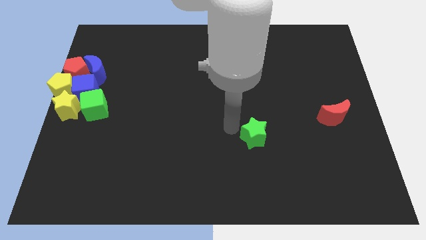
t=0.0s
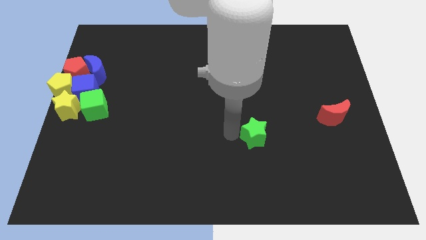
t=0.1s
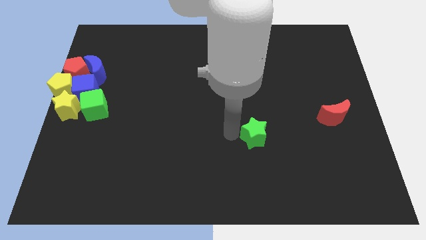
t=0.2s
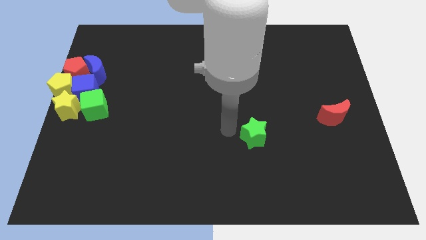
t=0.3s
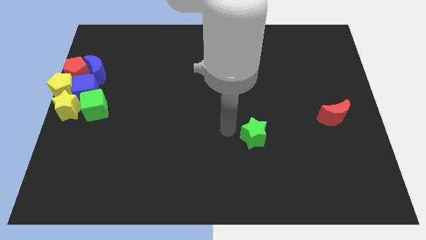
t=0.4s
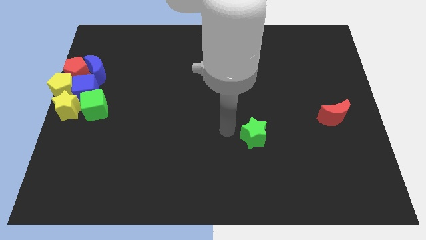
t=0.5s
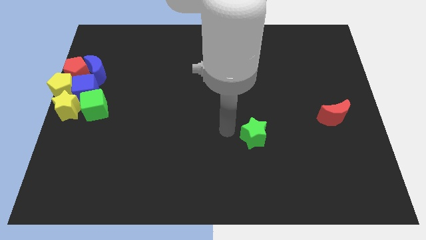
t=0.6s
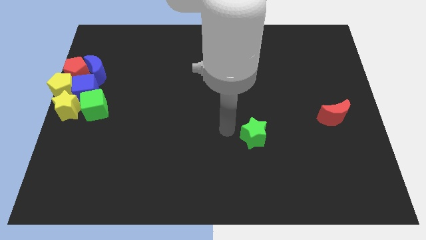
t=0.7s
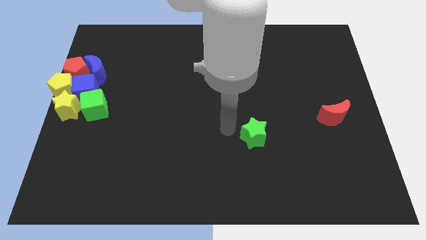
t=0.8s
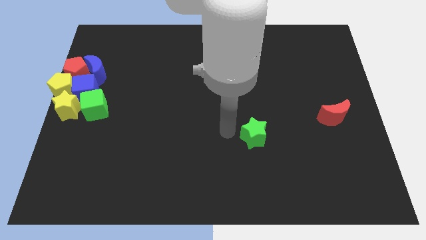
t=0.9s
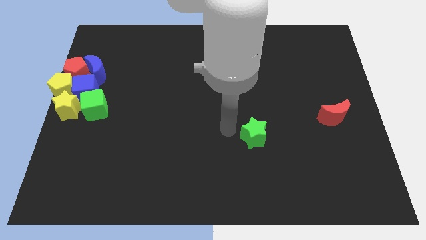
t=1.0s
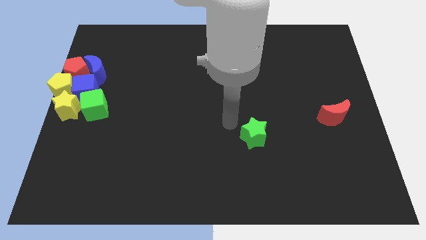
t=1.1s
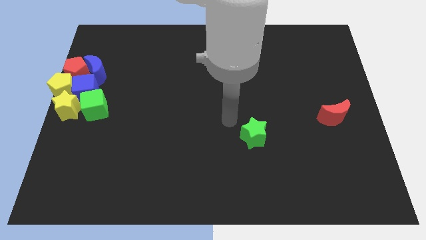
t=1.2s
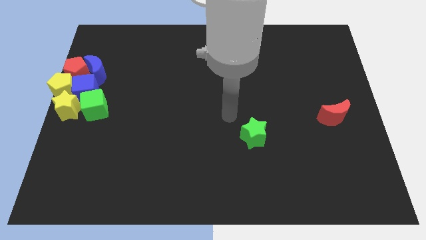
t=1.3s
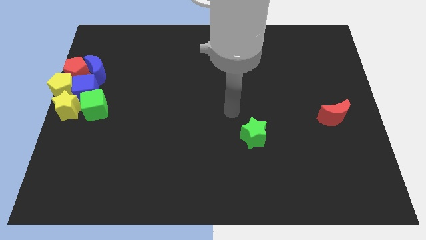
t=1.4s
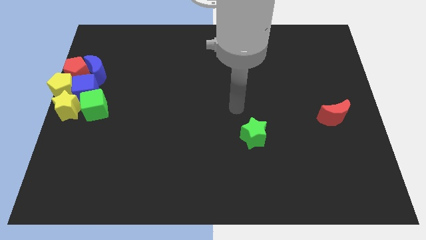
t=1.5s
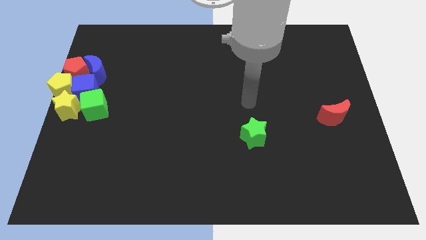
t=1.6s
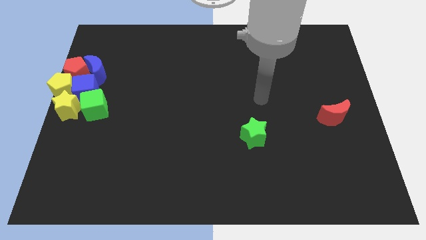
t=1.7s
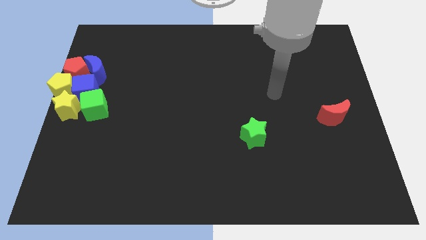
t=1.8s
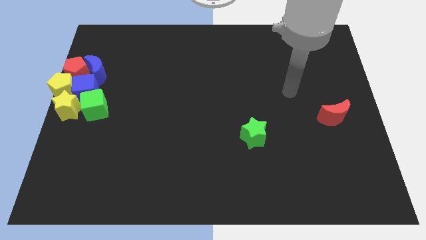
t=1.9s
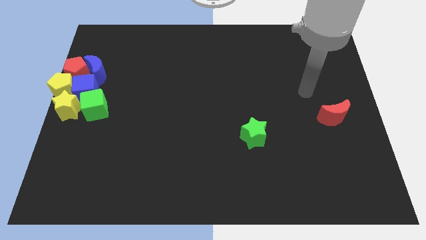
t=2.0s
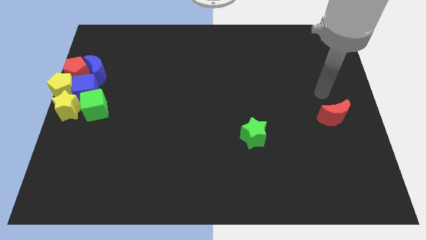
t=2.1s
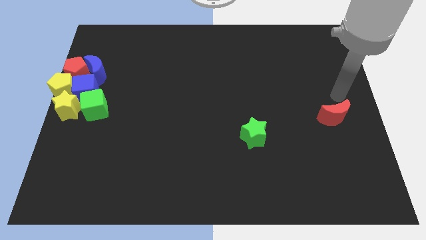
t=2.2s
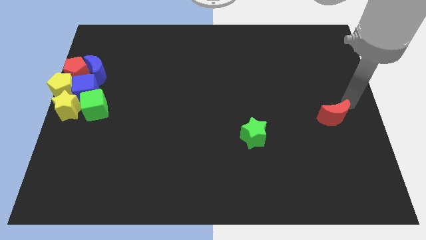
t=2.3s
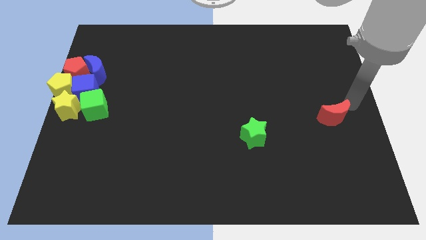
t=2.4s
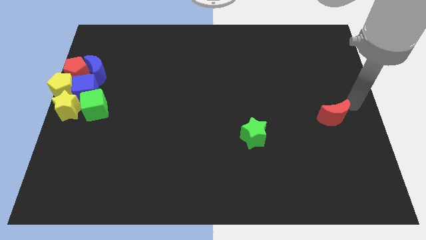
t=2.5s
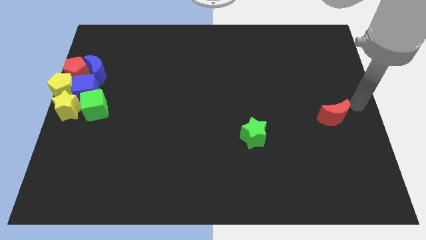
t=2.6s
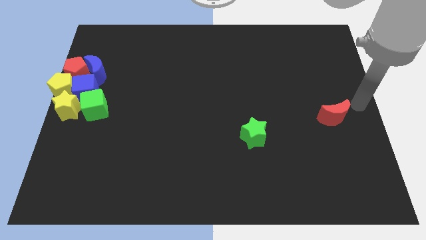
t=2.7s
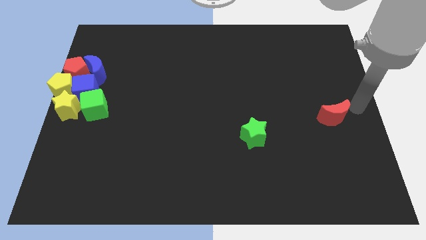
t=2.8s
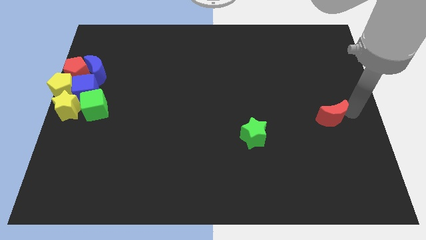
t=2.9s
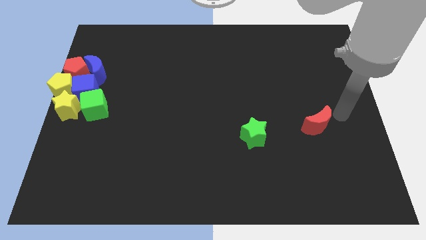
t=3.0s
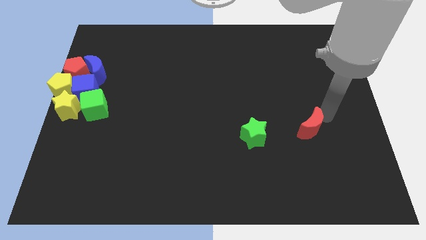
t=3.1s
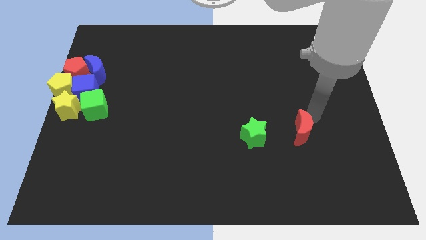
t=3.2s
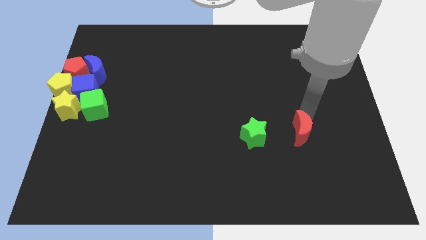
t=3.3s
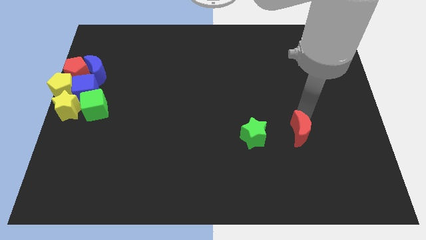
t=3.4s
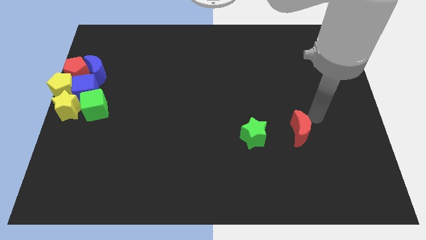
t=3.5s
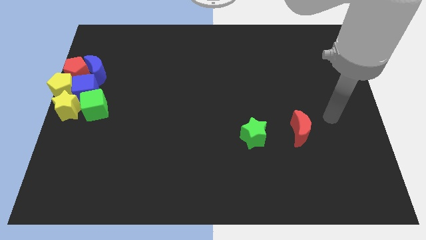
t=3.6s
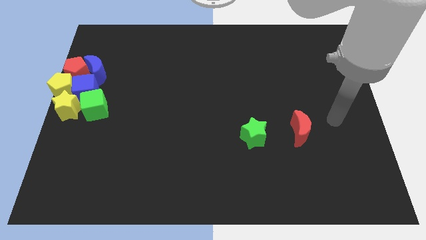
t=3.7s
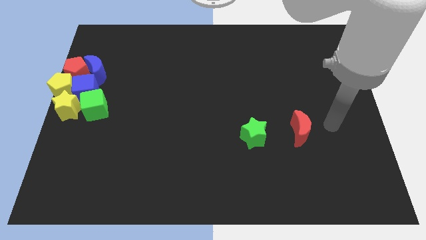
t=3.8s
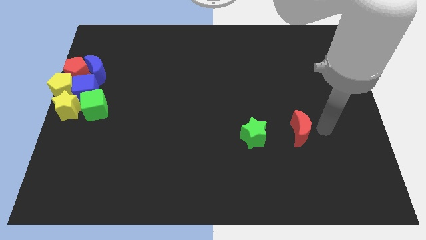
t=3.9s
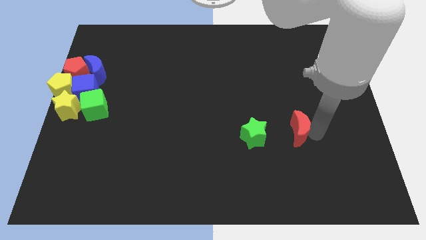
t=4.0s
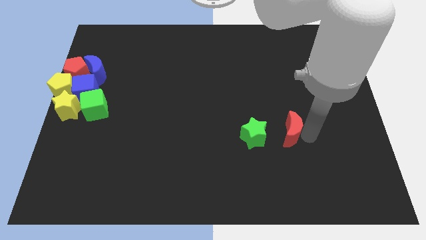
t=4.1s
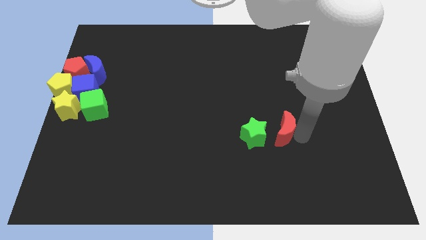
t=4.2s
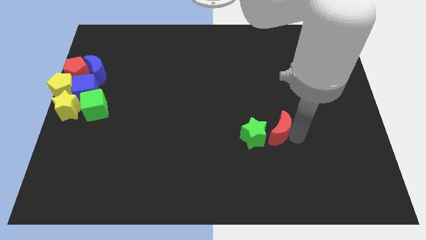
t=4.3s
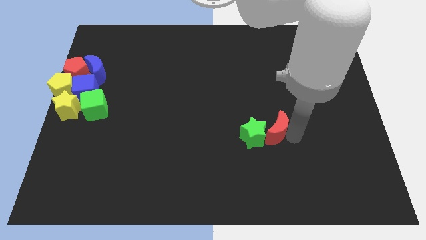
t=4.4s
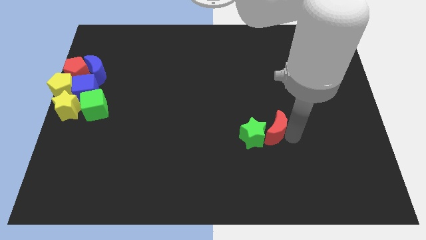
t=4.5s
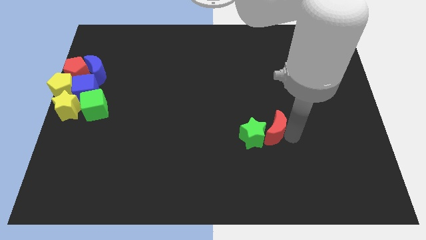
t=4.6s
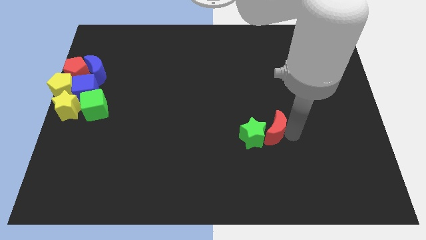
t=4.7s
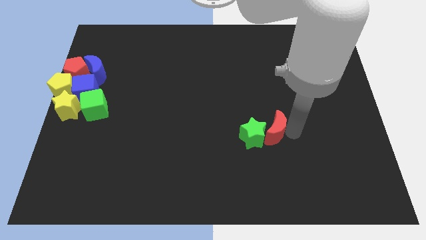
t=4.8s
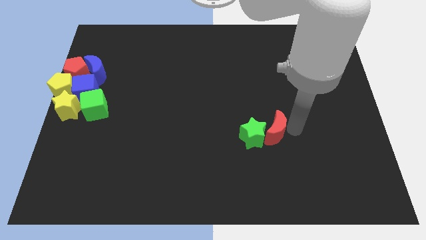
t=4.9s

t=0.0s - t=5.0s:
push the red crescent into the green star

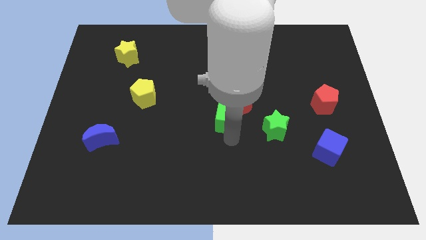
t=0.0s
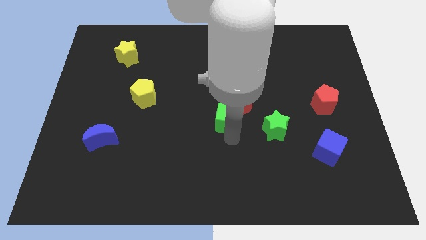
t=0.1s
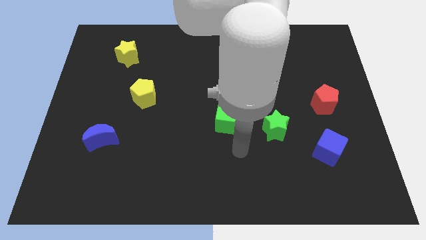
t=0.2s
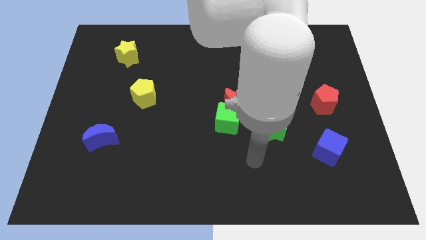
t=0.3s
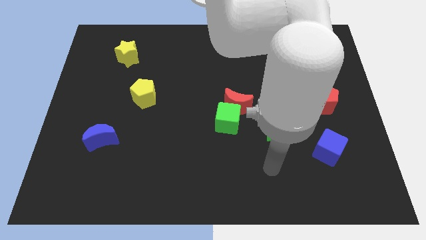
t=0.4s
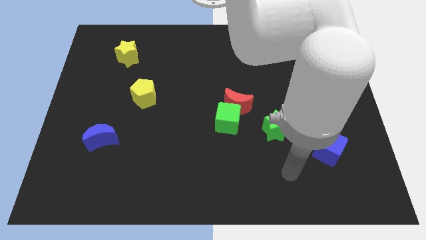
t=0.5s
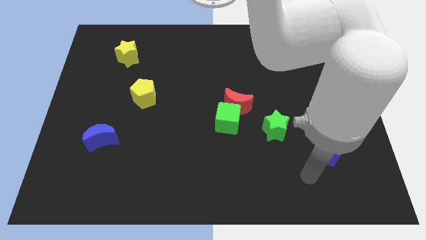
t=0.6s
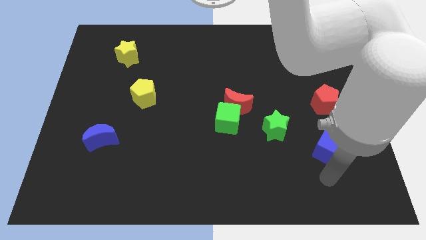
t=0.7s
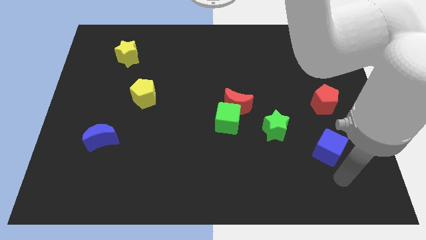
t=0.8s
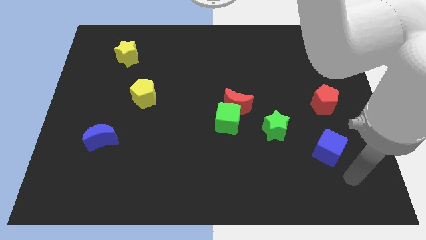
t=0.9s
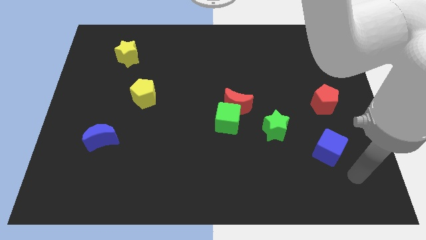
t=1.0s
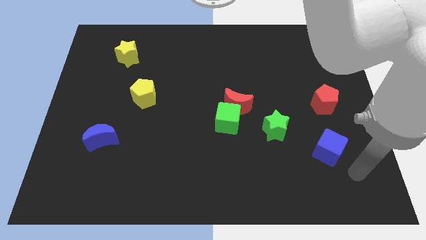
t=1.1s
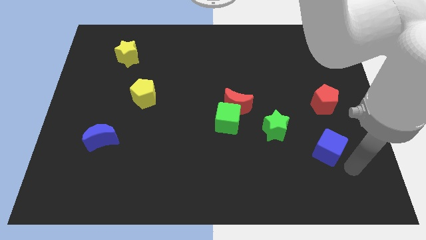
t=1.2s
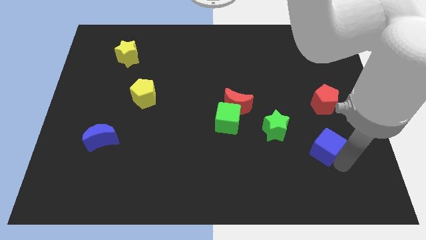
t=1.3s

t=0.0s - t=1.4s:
move the arm away from the green cube

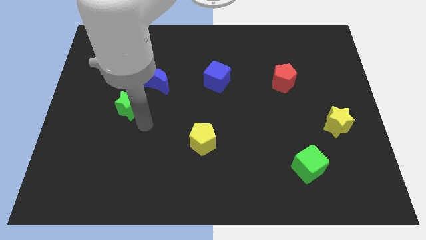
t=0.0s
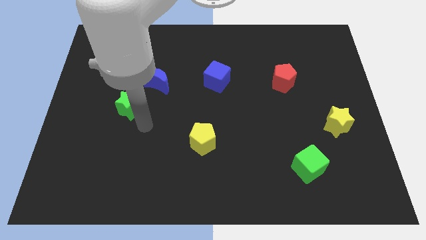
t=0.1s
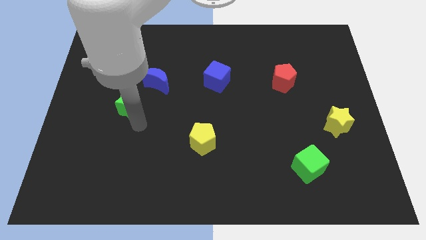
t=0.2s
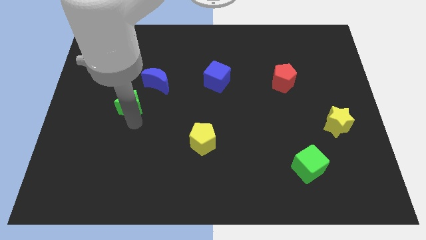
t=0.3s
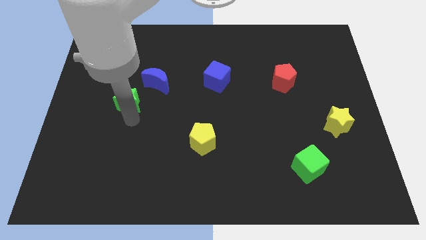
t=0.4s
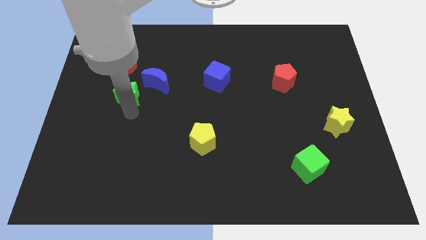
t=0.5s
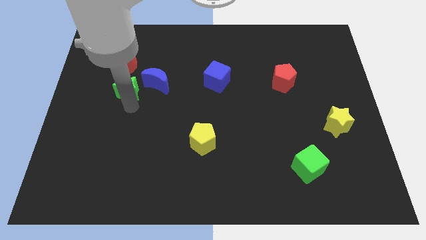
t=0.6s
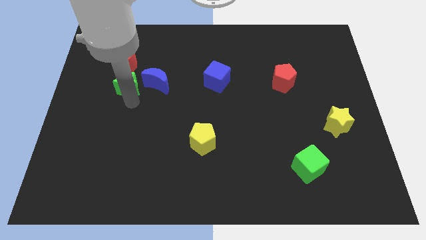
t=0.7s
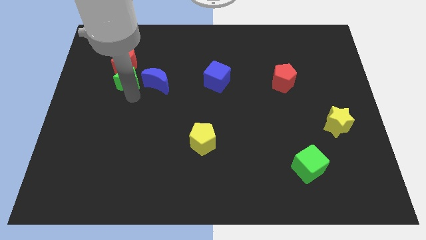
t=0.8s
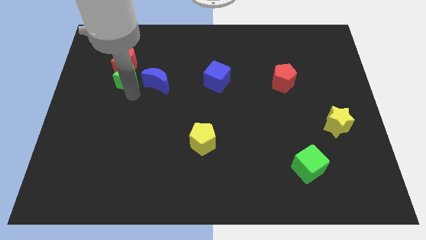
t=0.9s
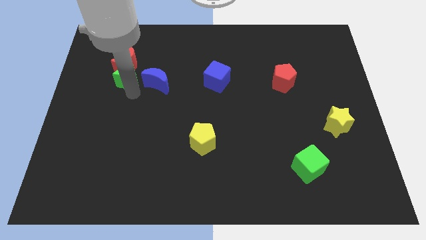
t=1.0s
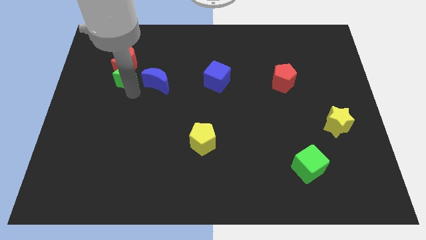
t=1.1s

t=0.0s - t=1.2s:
place the green star to the left side of blue moon

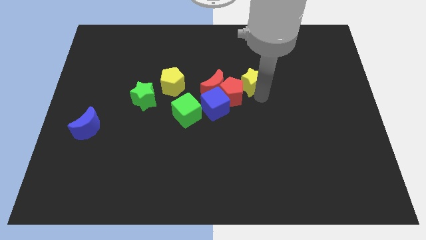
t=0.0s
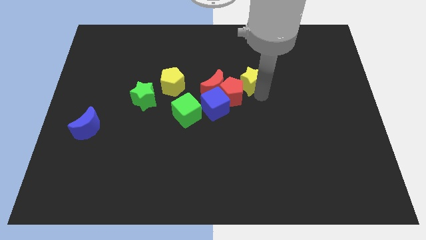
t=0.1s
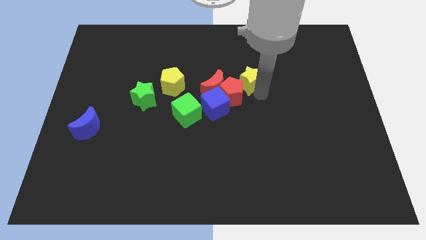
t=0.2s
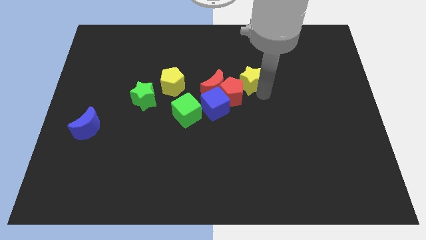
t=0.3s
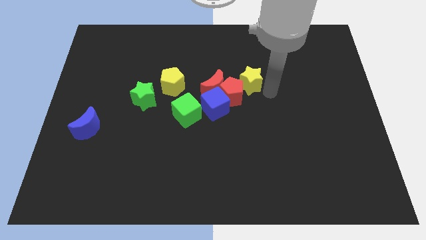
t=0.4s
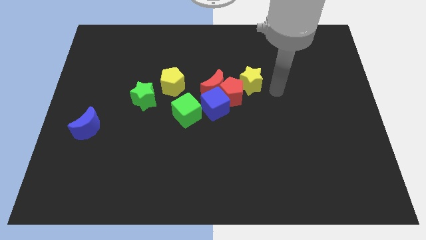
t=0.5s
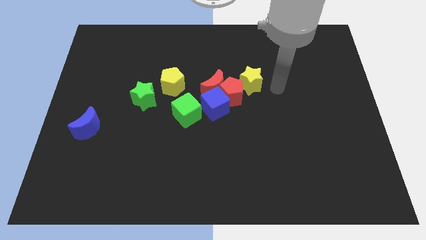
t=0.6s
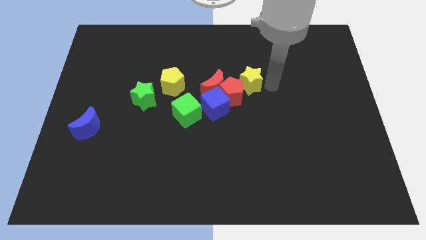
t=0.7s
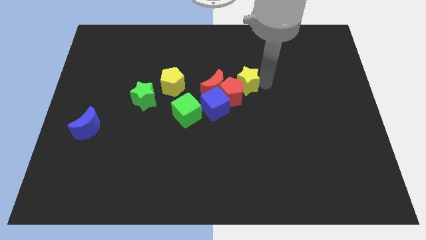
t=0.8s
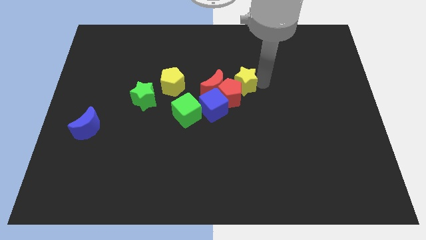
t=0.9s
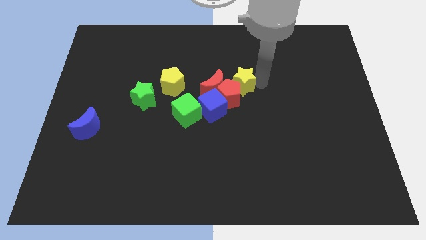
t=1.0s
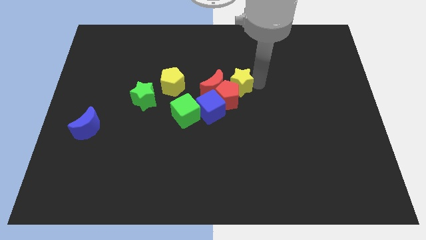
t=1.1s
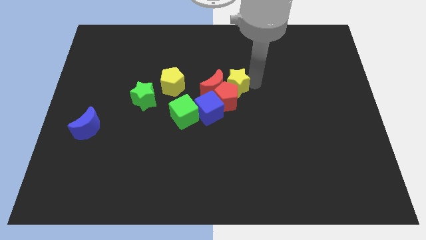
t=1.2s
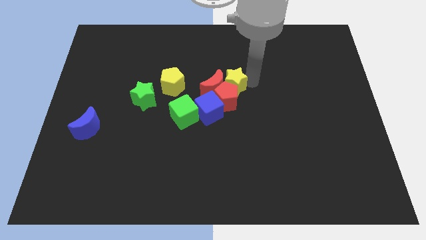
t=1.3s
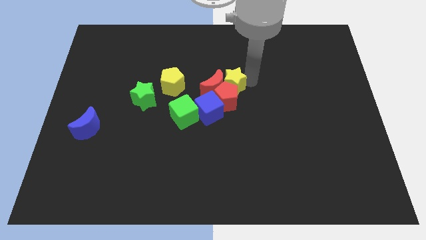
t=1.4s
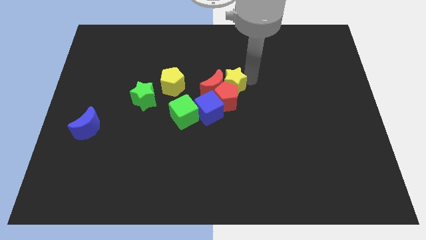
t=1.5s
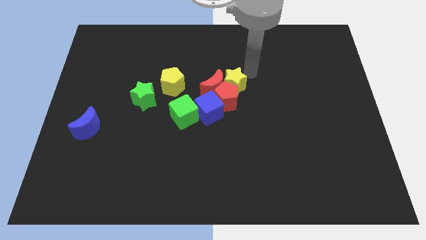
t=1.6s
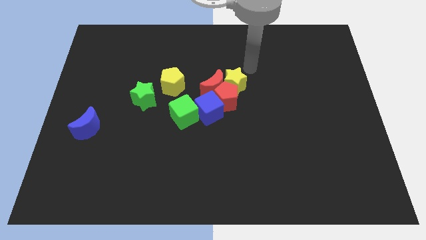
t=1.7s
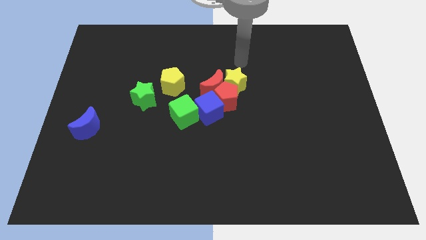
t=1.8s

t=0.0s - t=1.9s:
slightly push the yellow star towards bottom
